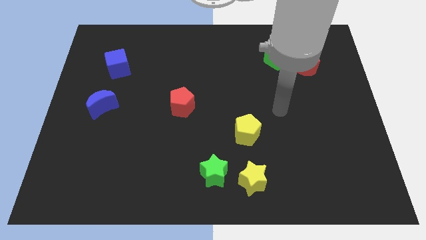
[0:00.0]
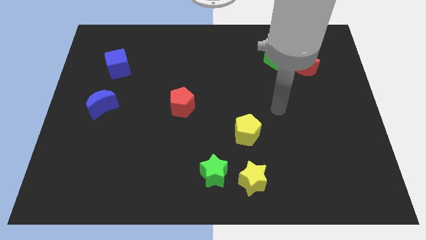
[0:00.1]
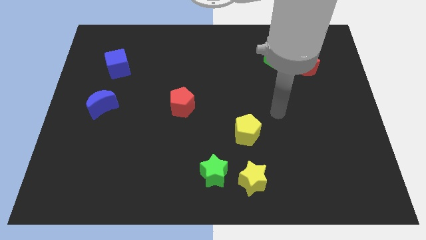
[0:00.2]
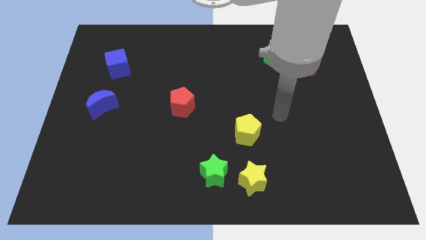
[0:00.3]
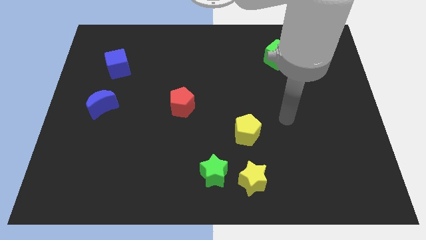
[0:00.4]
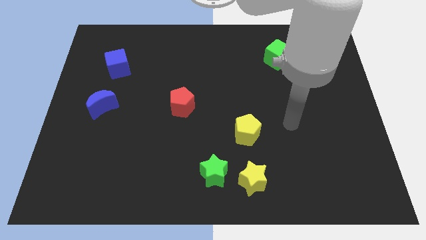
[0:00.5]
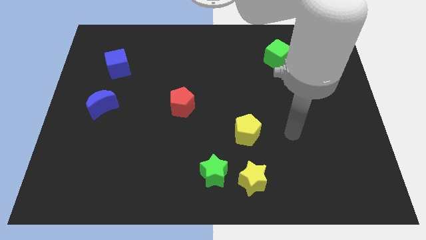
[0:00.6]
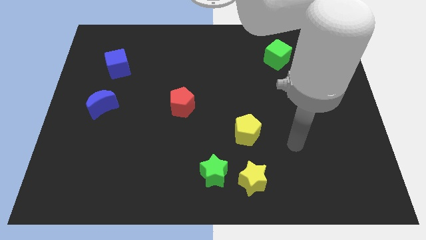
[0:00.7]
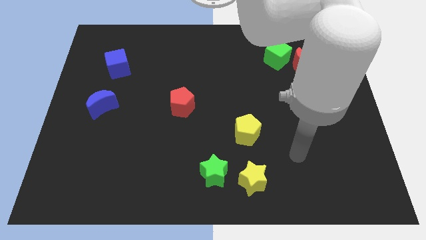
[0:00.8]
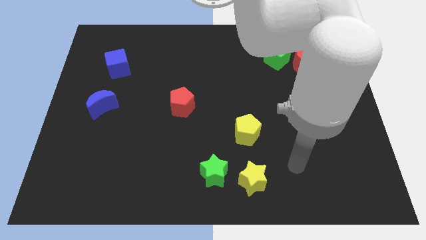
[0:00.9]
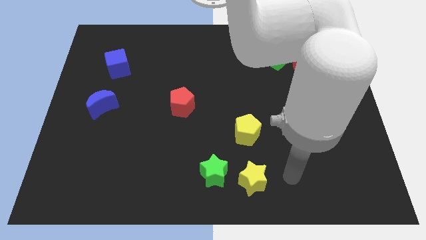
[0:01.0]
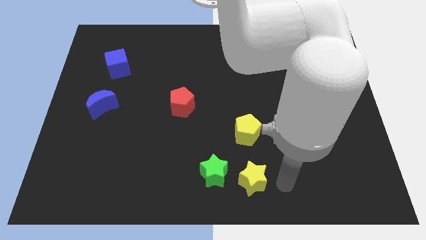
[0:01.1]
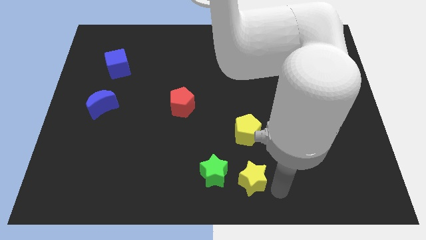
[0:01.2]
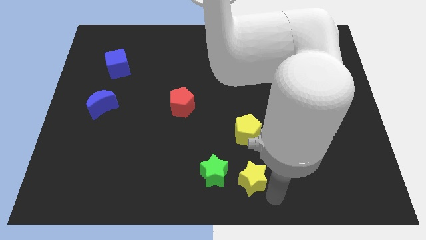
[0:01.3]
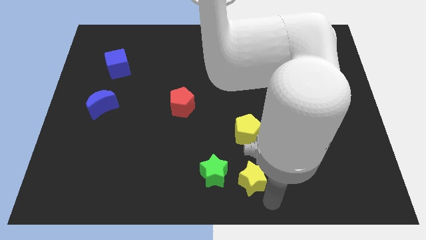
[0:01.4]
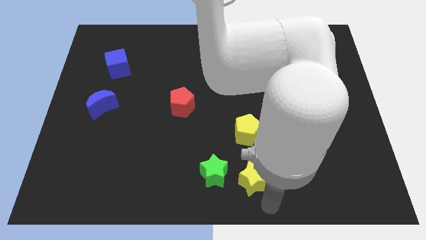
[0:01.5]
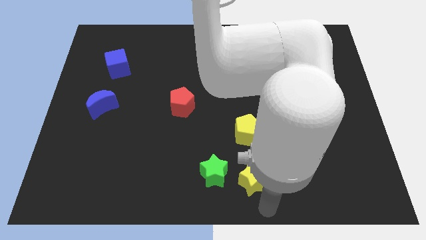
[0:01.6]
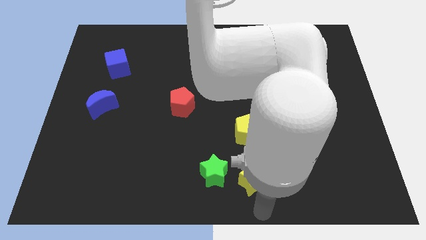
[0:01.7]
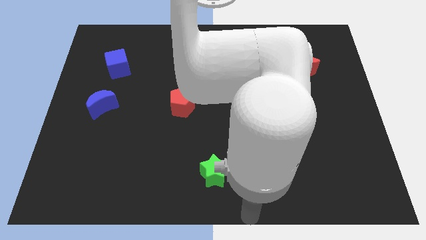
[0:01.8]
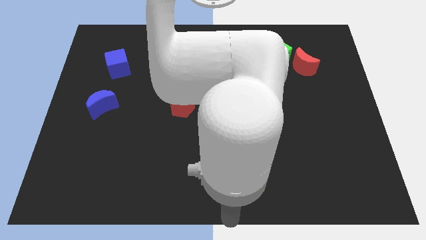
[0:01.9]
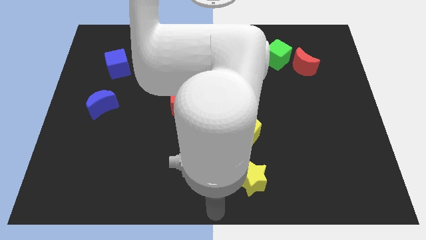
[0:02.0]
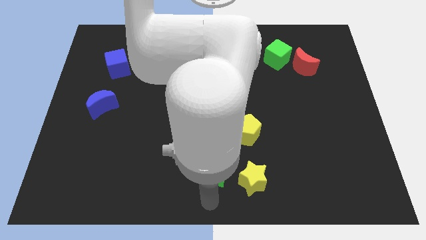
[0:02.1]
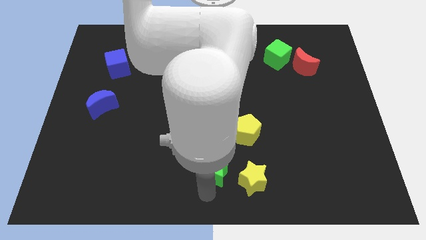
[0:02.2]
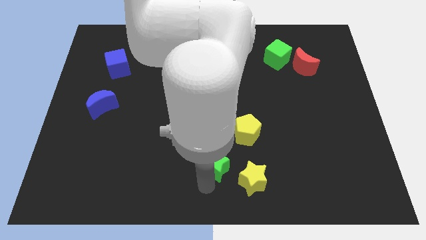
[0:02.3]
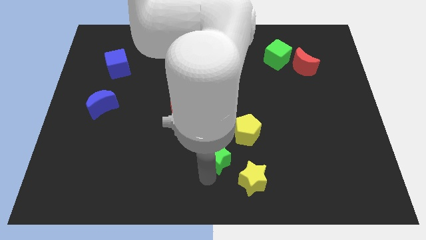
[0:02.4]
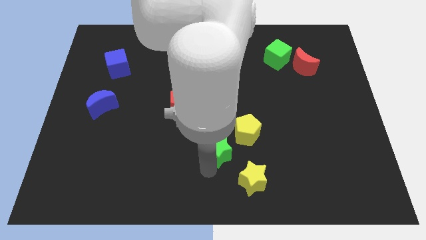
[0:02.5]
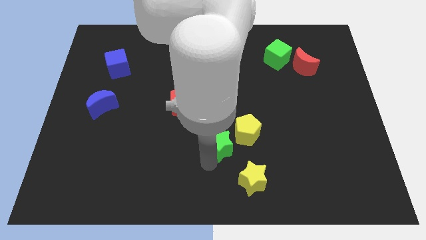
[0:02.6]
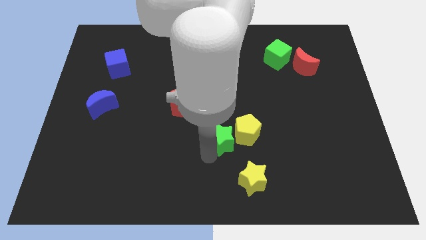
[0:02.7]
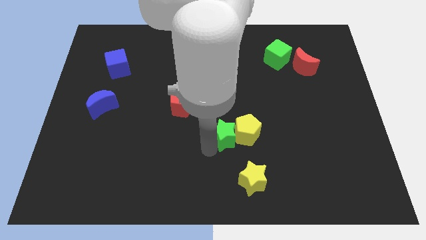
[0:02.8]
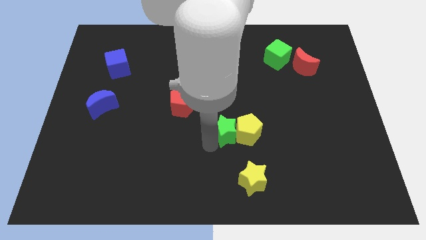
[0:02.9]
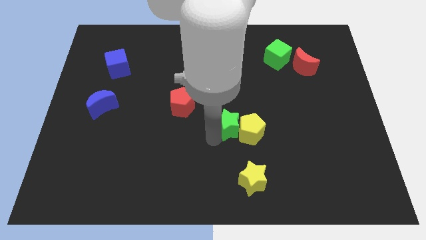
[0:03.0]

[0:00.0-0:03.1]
push green star beside yellow pentagon

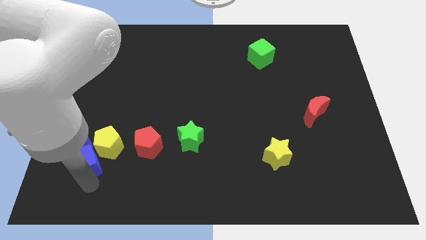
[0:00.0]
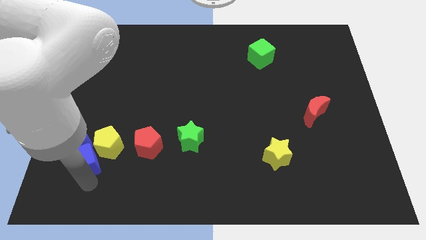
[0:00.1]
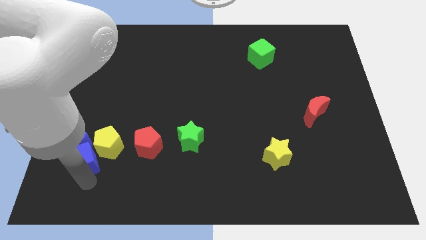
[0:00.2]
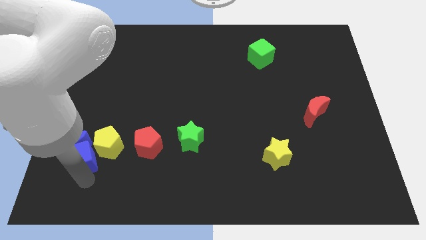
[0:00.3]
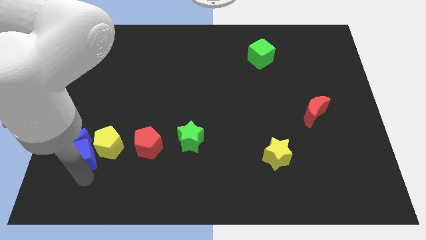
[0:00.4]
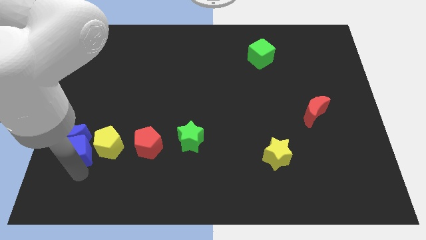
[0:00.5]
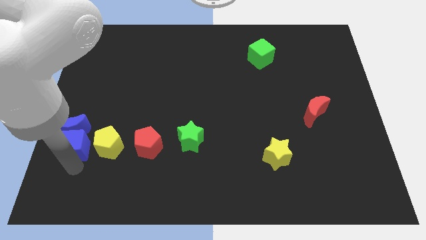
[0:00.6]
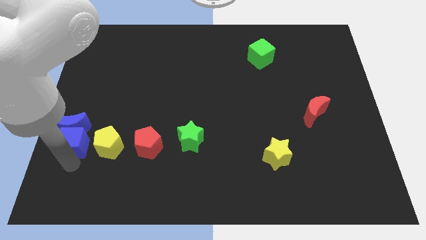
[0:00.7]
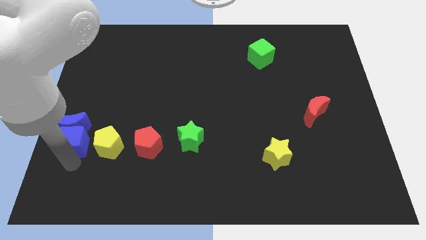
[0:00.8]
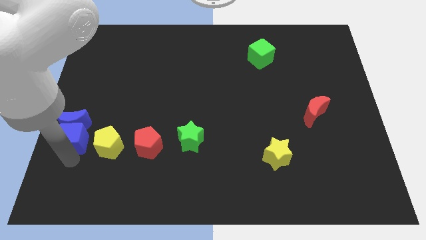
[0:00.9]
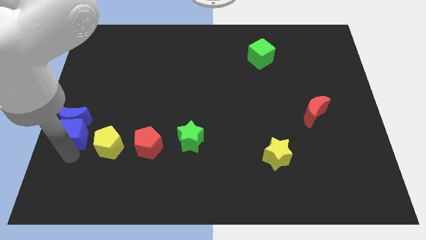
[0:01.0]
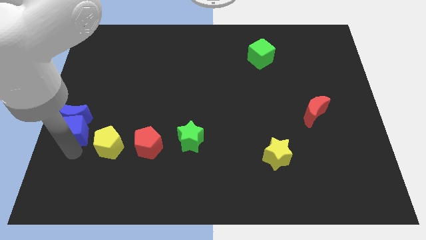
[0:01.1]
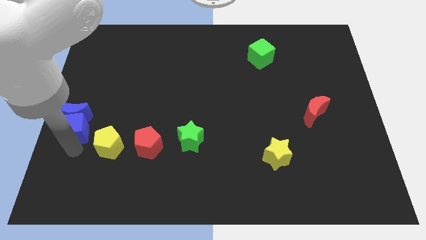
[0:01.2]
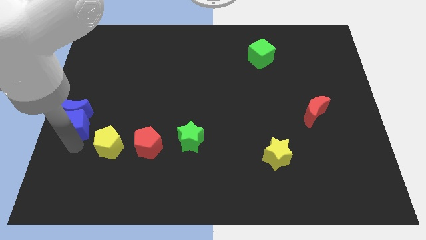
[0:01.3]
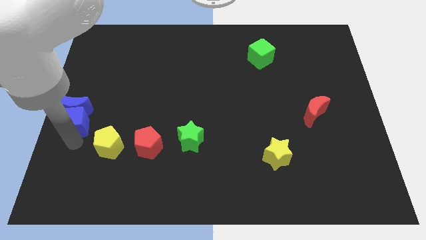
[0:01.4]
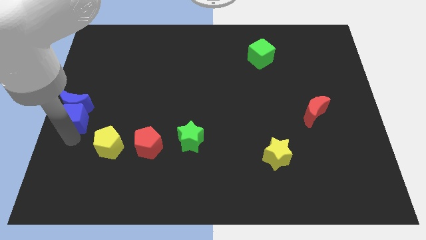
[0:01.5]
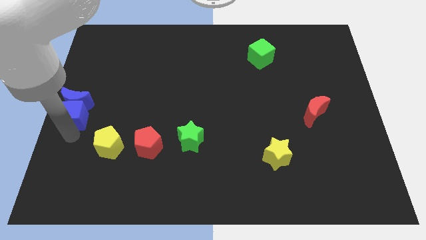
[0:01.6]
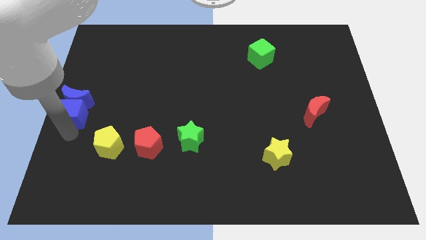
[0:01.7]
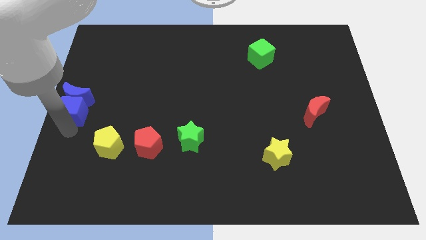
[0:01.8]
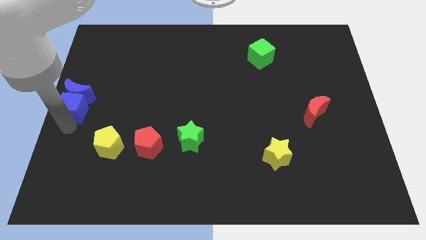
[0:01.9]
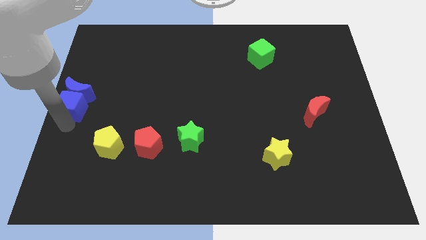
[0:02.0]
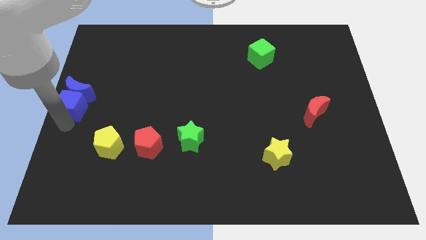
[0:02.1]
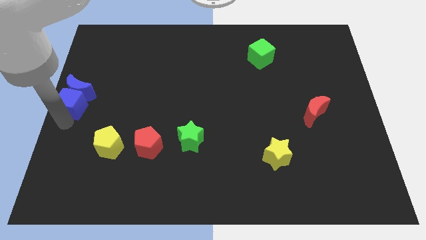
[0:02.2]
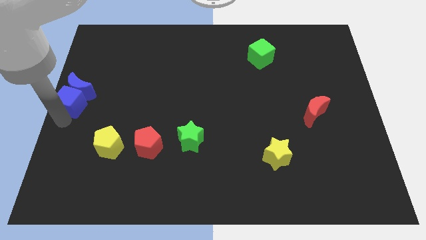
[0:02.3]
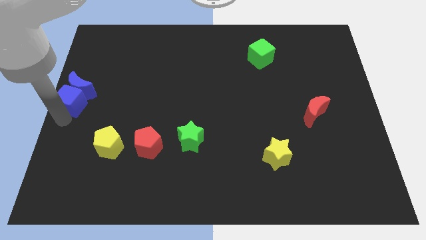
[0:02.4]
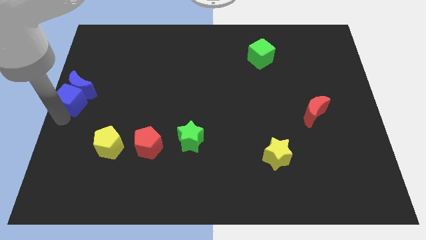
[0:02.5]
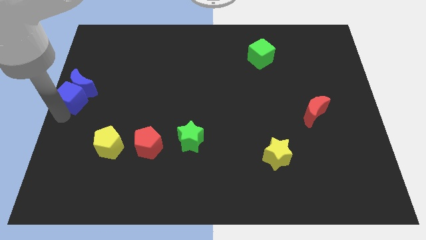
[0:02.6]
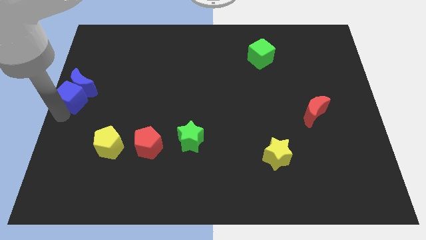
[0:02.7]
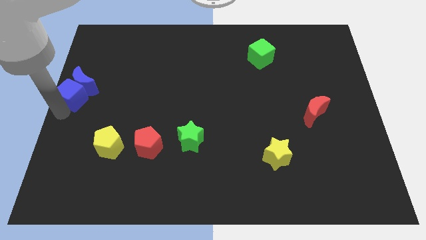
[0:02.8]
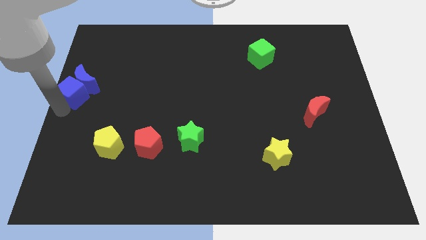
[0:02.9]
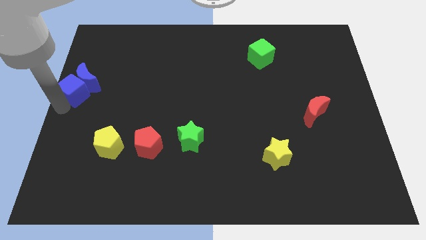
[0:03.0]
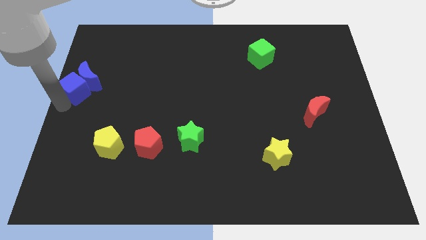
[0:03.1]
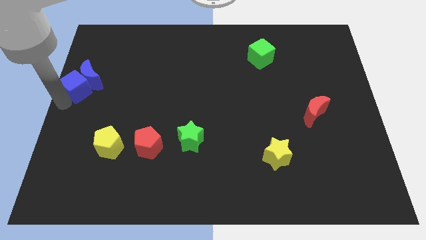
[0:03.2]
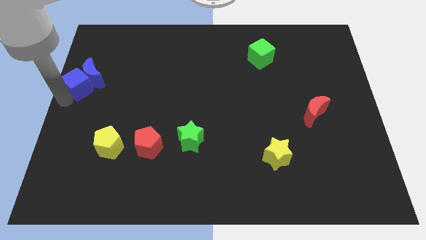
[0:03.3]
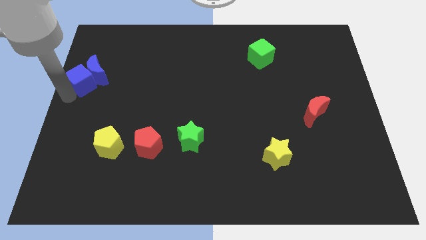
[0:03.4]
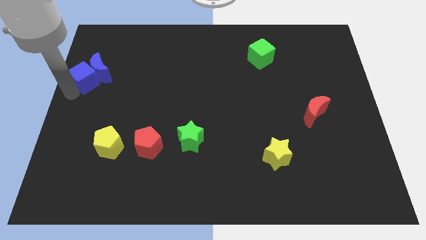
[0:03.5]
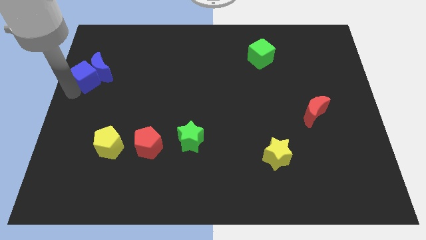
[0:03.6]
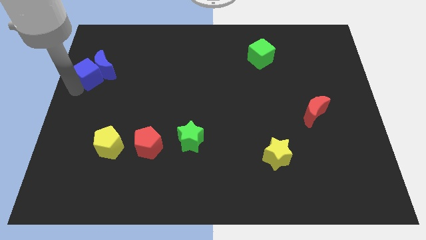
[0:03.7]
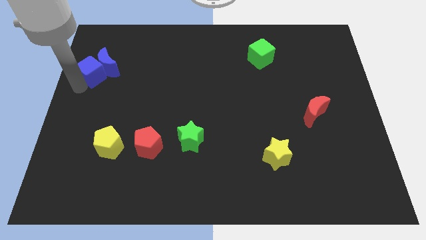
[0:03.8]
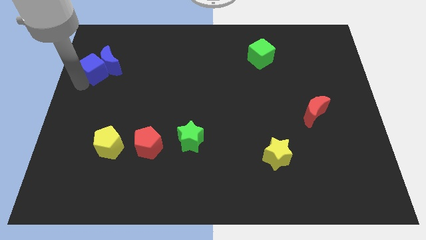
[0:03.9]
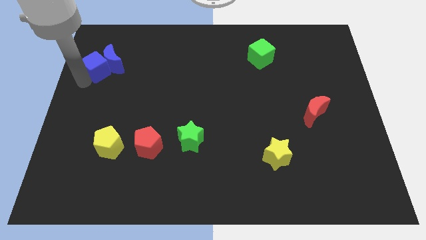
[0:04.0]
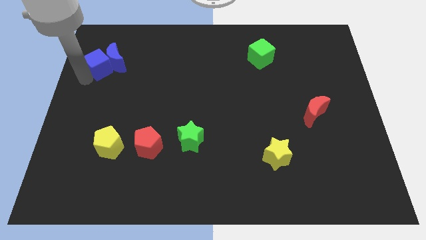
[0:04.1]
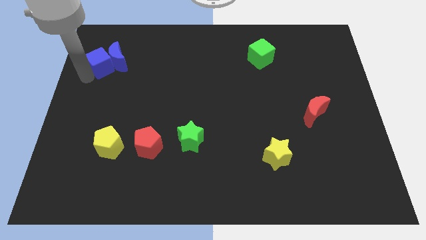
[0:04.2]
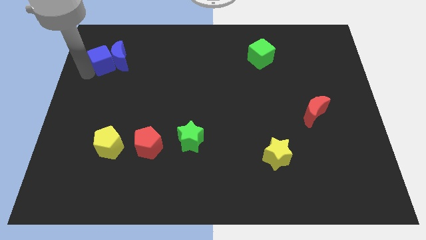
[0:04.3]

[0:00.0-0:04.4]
push the blue blocks toward the top left

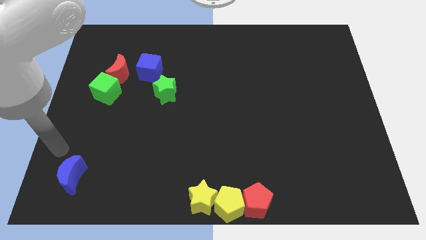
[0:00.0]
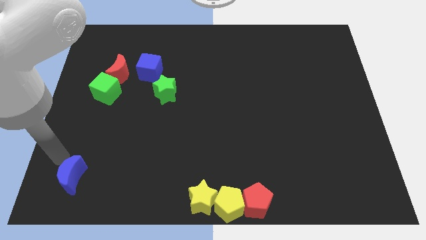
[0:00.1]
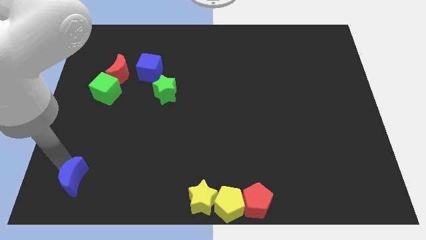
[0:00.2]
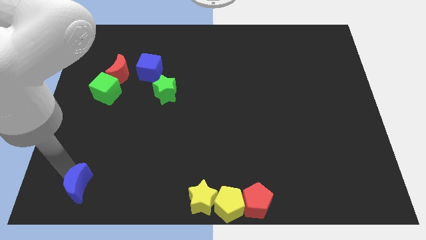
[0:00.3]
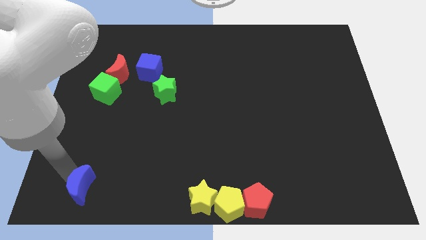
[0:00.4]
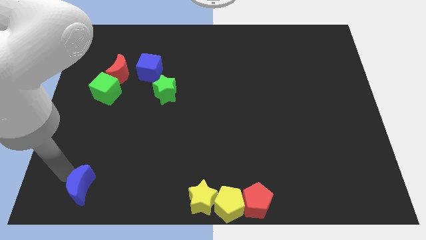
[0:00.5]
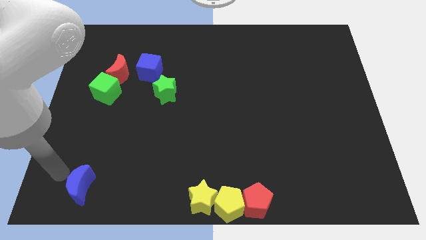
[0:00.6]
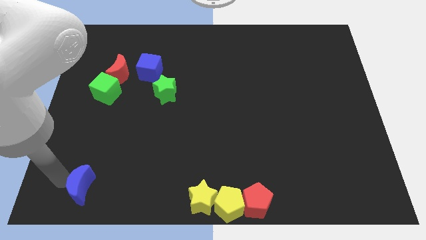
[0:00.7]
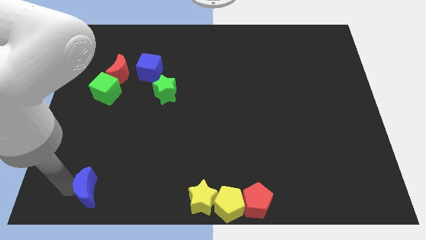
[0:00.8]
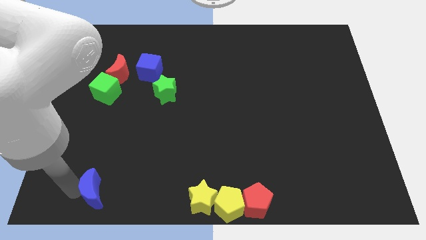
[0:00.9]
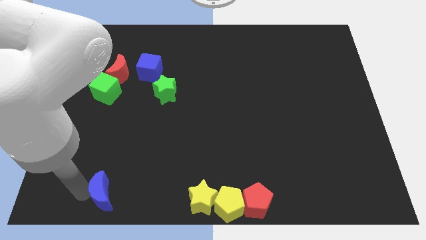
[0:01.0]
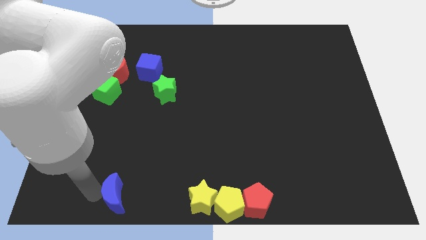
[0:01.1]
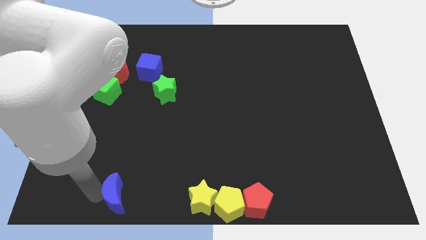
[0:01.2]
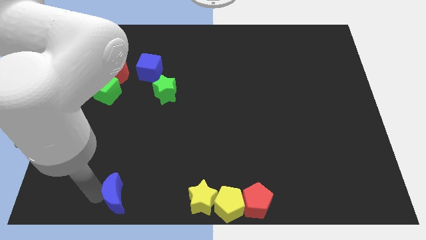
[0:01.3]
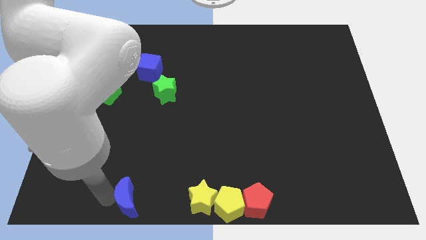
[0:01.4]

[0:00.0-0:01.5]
push the blue moon parallel to the left side of the yellow star

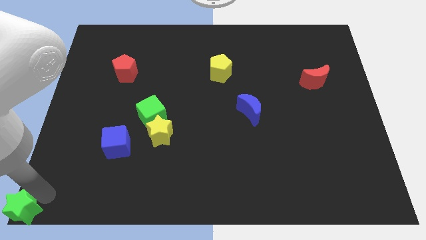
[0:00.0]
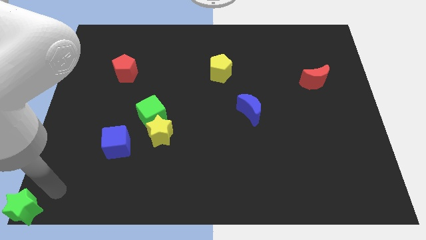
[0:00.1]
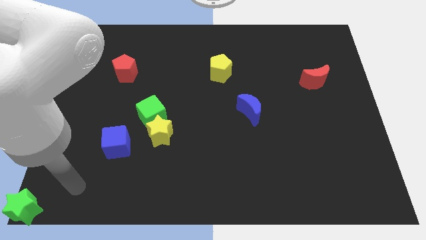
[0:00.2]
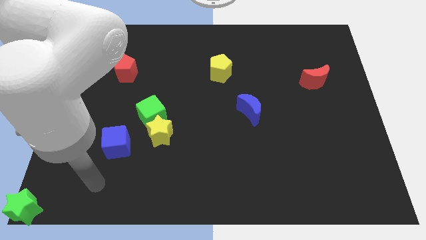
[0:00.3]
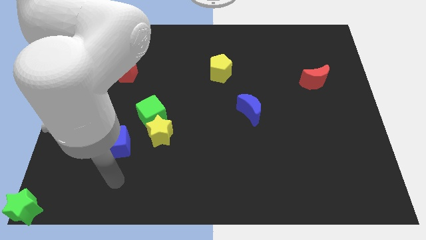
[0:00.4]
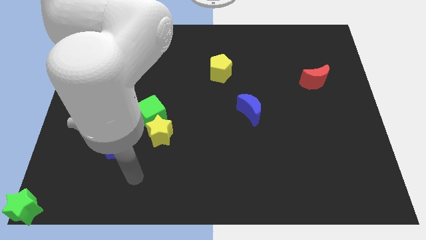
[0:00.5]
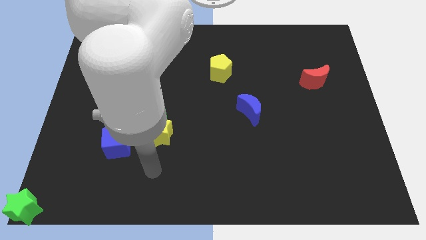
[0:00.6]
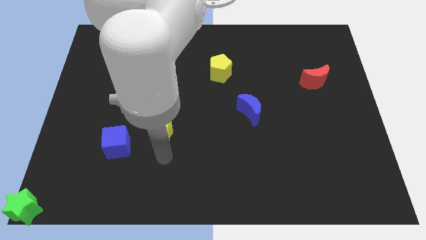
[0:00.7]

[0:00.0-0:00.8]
place your arm to the bottom of the yellow star
